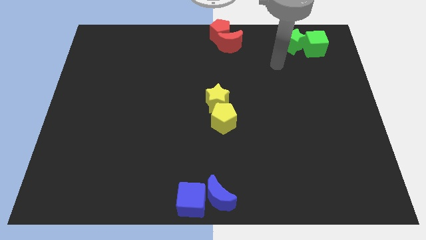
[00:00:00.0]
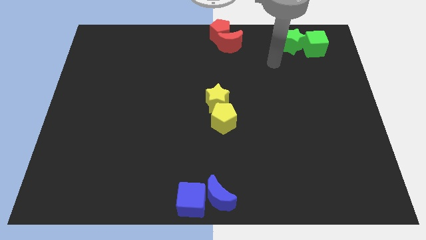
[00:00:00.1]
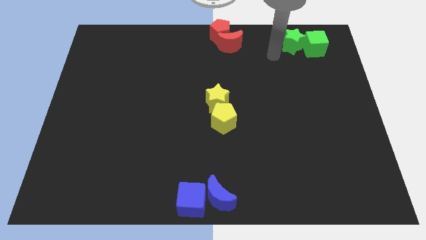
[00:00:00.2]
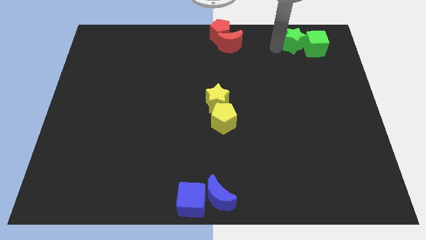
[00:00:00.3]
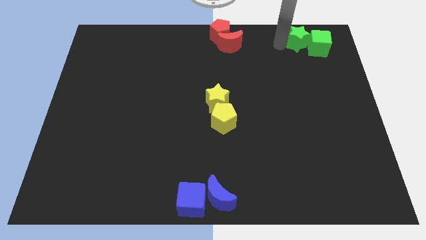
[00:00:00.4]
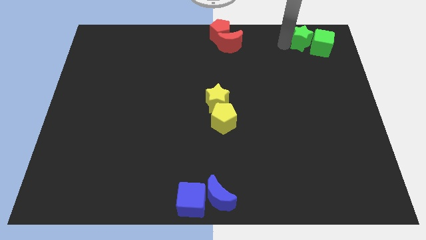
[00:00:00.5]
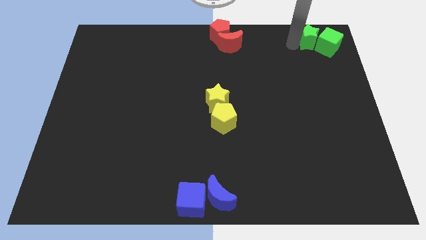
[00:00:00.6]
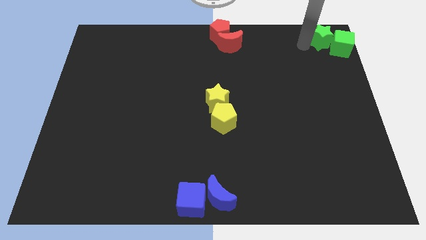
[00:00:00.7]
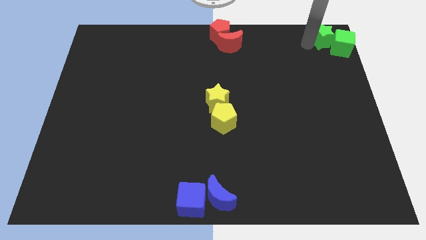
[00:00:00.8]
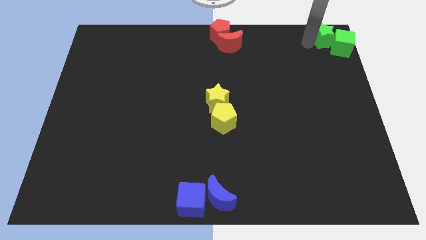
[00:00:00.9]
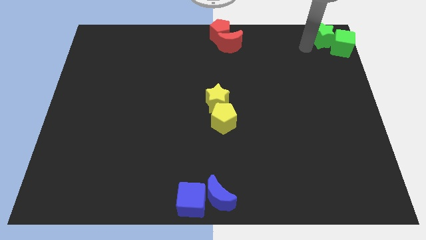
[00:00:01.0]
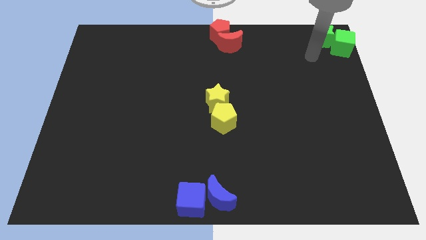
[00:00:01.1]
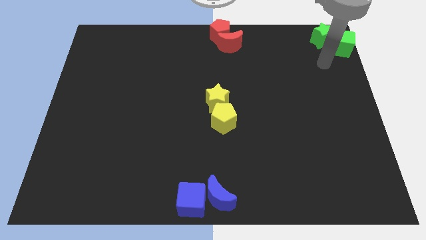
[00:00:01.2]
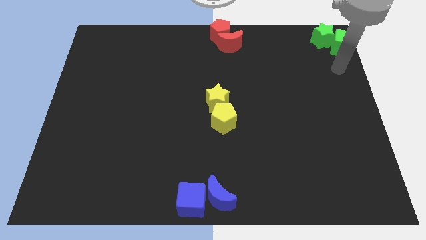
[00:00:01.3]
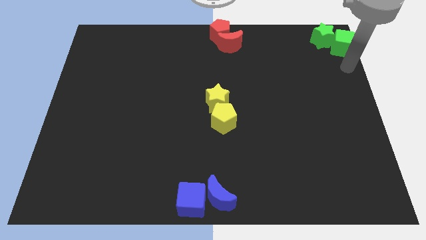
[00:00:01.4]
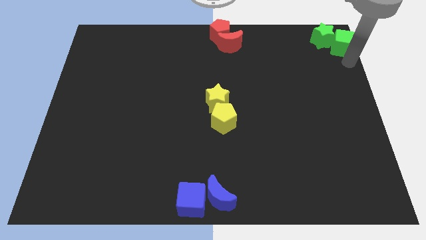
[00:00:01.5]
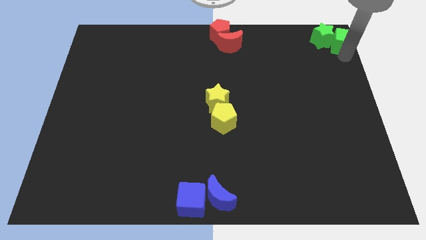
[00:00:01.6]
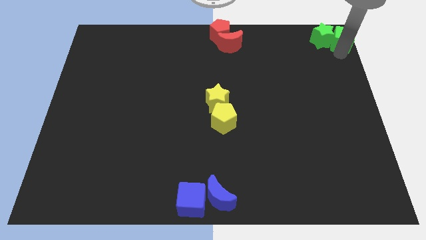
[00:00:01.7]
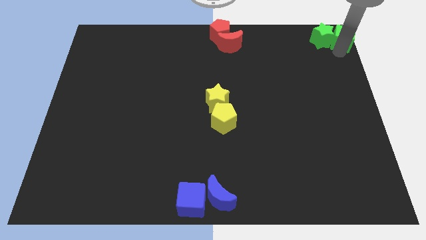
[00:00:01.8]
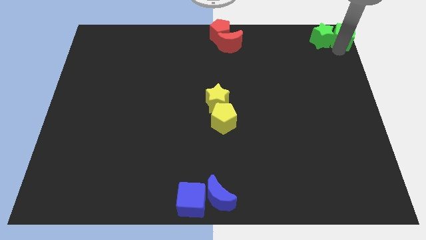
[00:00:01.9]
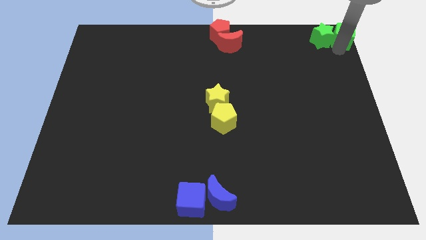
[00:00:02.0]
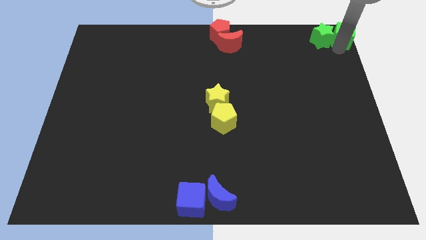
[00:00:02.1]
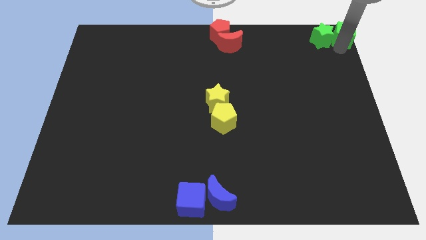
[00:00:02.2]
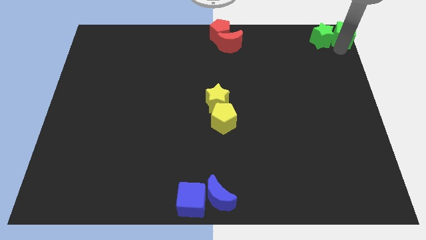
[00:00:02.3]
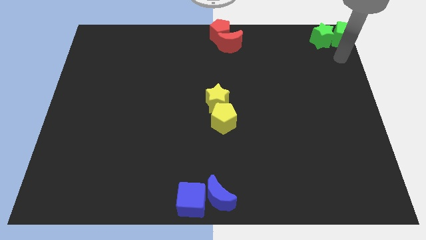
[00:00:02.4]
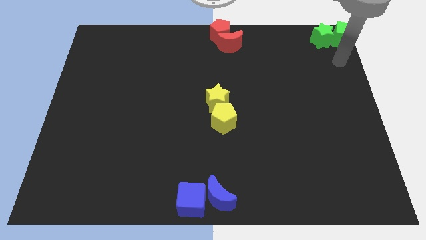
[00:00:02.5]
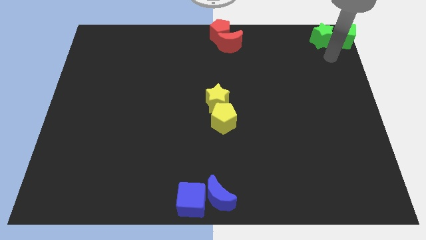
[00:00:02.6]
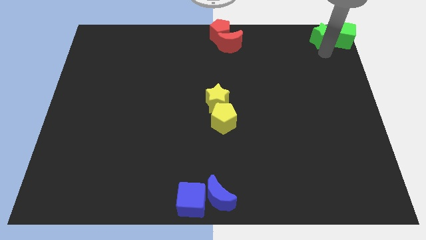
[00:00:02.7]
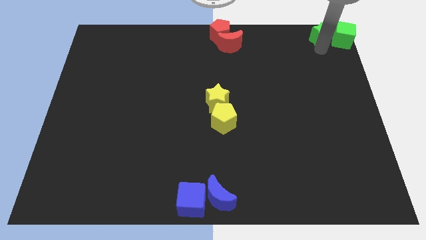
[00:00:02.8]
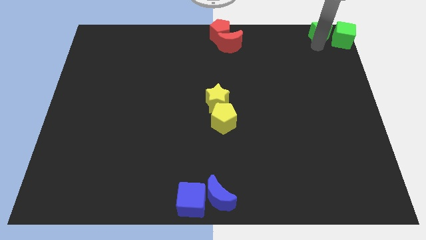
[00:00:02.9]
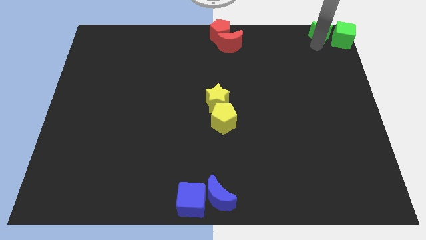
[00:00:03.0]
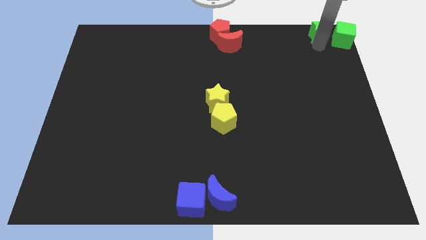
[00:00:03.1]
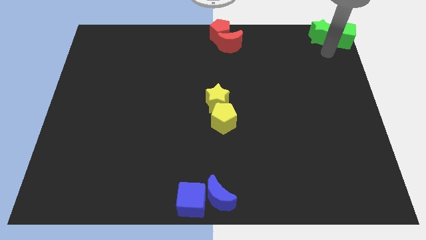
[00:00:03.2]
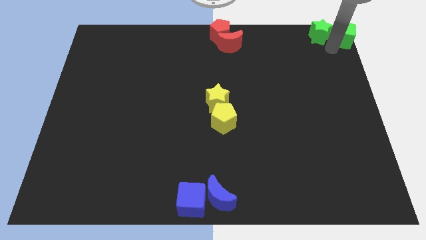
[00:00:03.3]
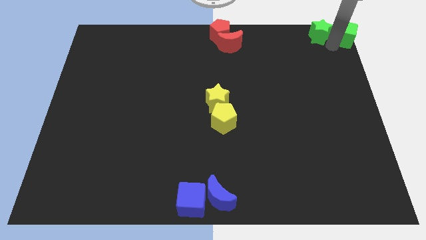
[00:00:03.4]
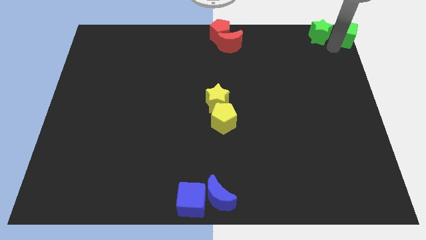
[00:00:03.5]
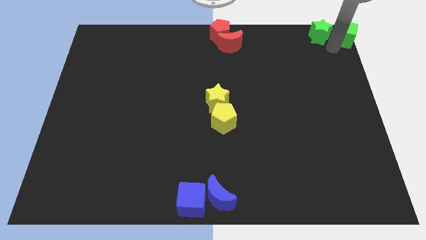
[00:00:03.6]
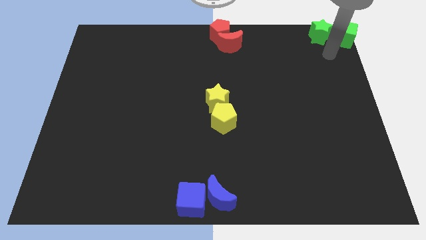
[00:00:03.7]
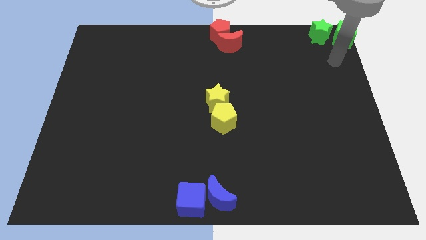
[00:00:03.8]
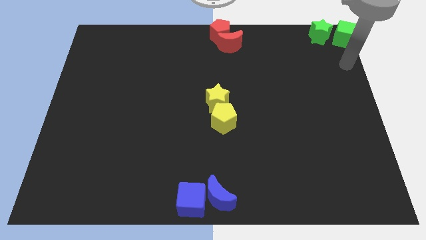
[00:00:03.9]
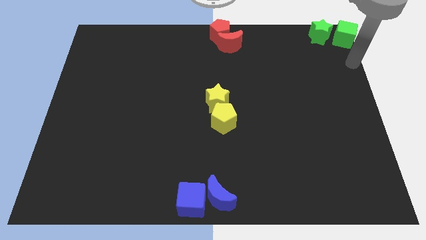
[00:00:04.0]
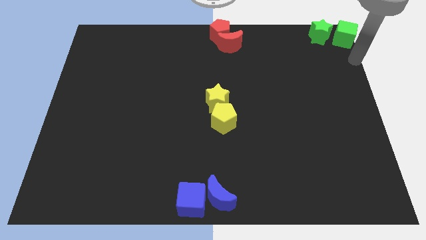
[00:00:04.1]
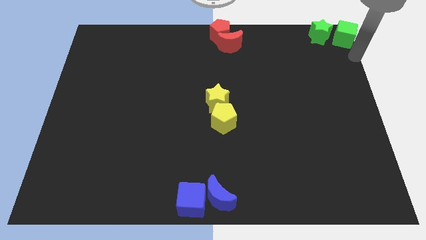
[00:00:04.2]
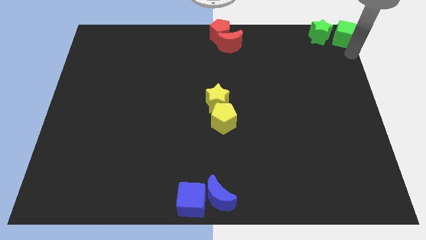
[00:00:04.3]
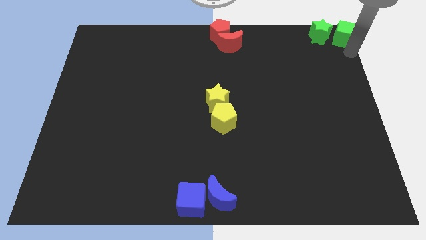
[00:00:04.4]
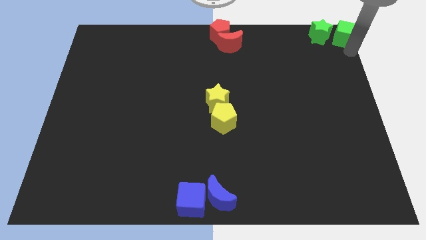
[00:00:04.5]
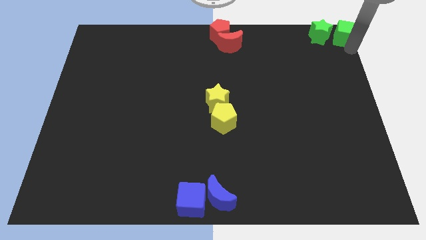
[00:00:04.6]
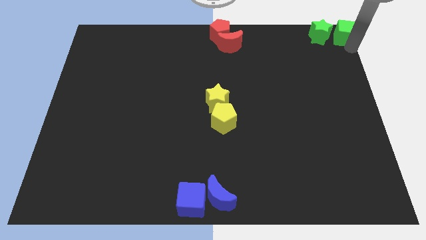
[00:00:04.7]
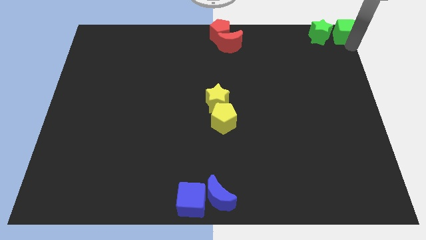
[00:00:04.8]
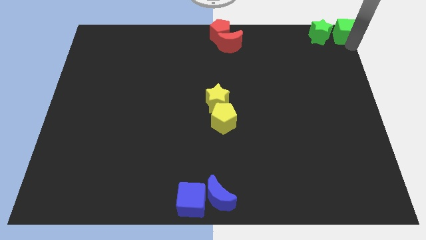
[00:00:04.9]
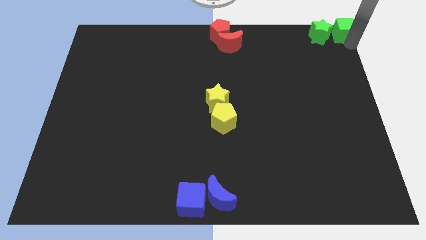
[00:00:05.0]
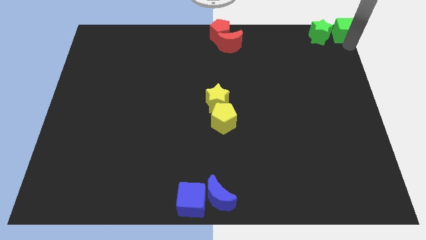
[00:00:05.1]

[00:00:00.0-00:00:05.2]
slide the green blocks to the top right corner of the table

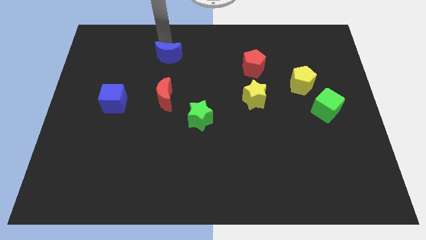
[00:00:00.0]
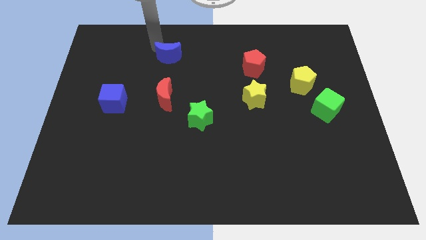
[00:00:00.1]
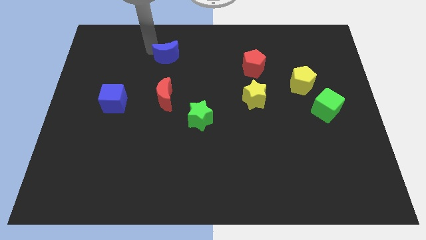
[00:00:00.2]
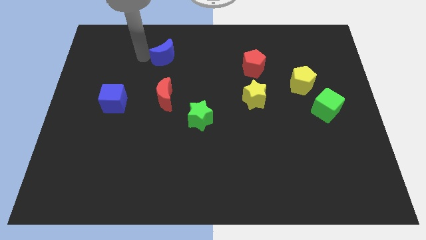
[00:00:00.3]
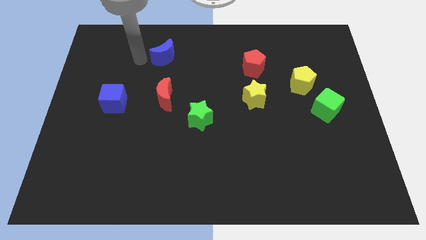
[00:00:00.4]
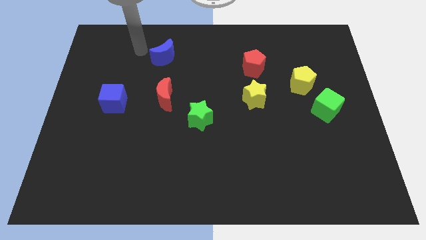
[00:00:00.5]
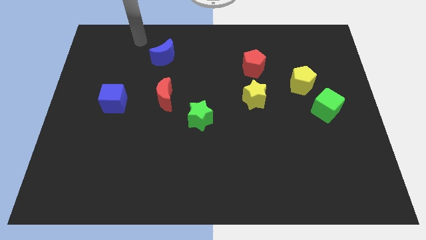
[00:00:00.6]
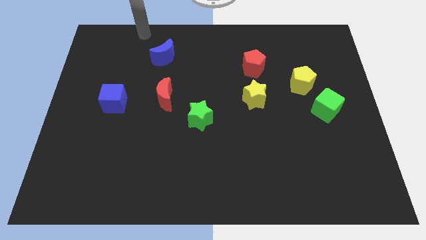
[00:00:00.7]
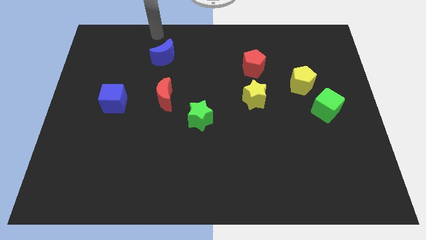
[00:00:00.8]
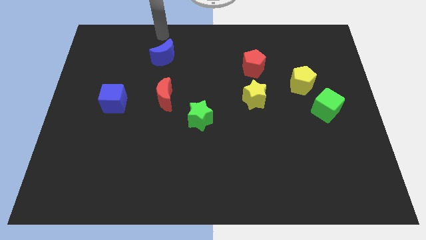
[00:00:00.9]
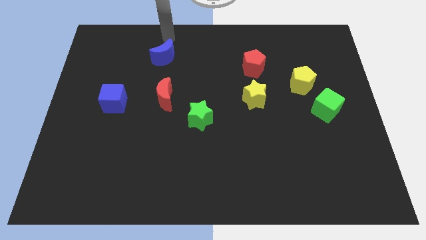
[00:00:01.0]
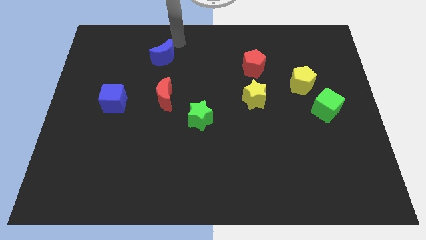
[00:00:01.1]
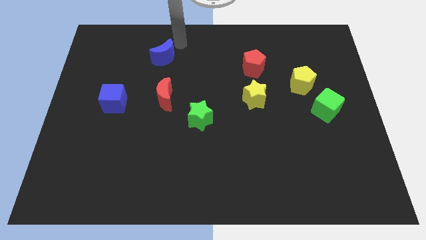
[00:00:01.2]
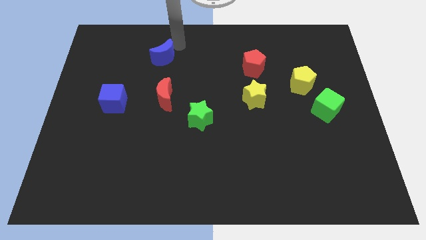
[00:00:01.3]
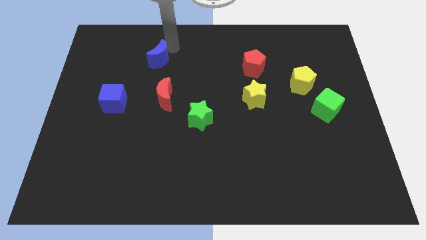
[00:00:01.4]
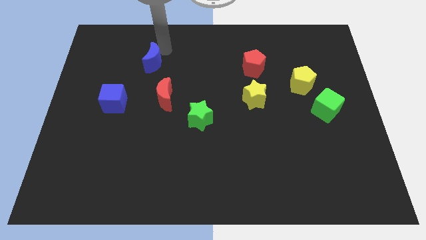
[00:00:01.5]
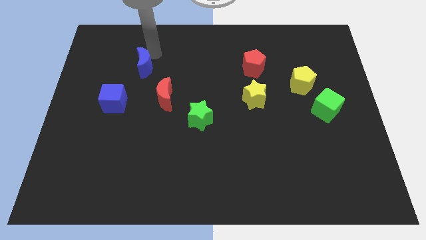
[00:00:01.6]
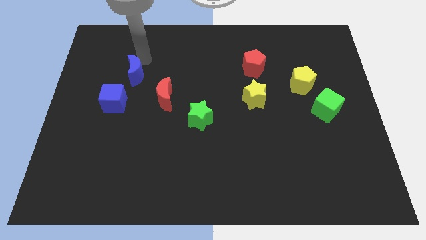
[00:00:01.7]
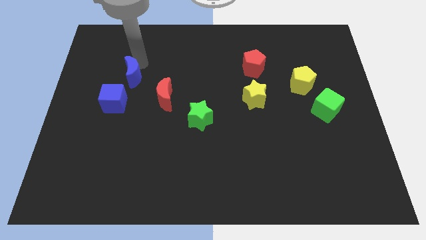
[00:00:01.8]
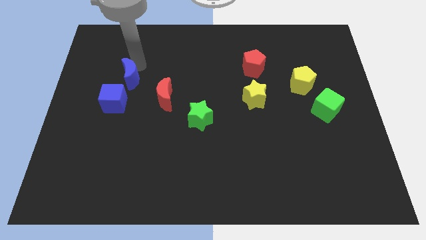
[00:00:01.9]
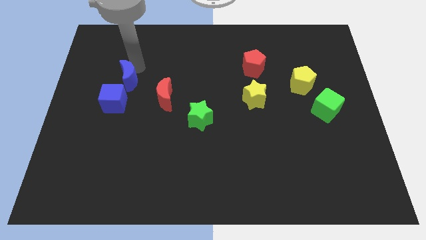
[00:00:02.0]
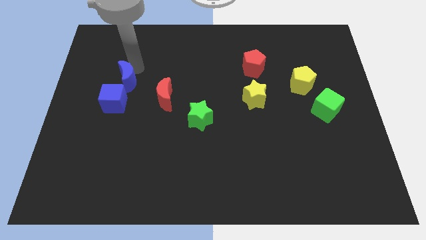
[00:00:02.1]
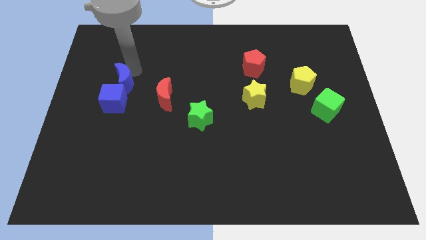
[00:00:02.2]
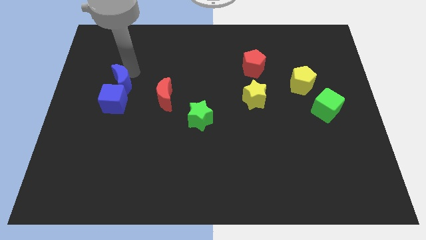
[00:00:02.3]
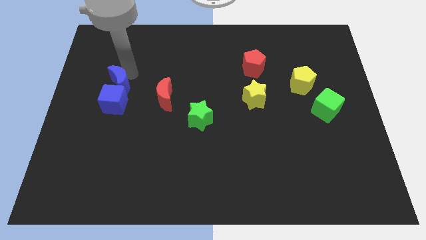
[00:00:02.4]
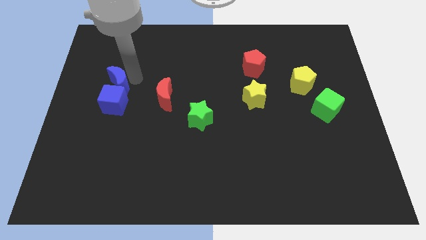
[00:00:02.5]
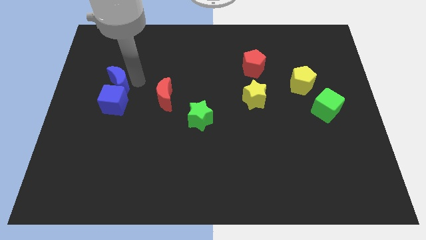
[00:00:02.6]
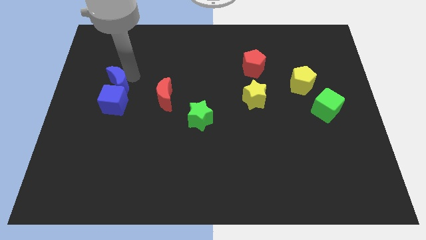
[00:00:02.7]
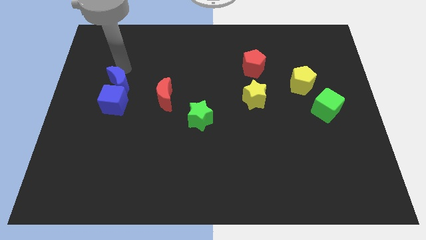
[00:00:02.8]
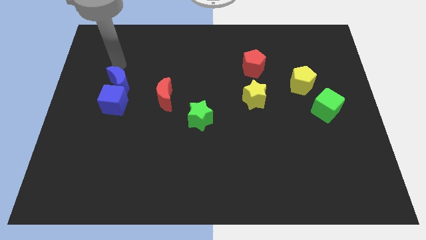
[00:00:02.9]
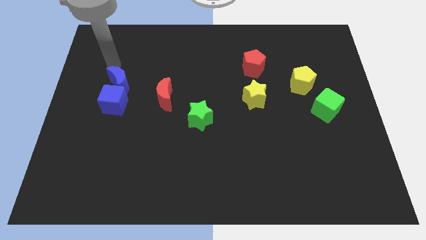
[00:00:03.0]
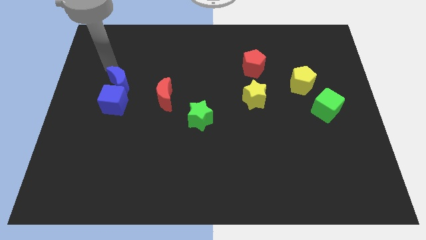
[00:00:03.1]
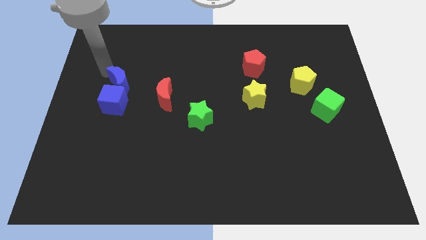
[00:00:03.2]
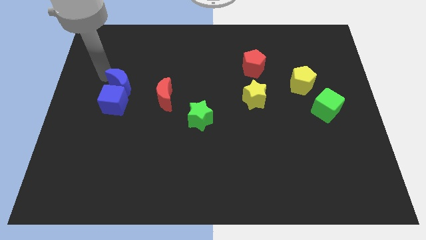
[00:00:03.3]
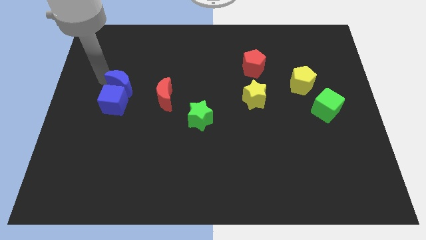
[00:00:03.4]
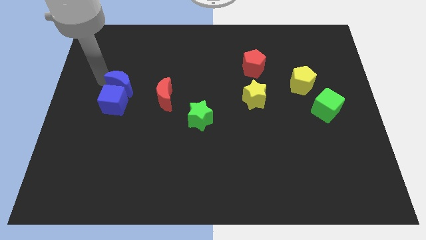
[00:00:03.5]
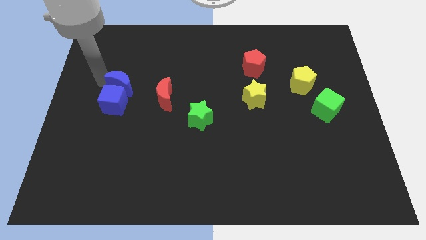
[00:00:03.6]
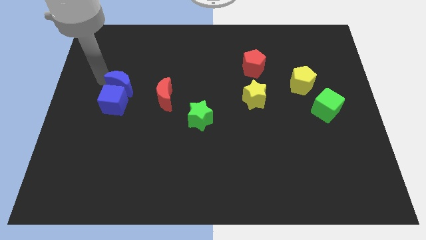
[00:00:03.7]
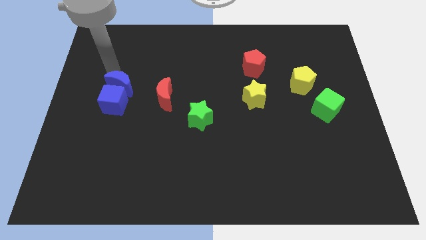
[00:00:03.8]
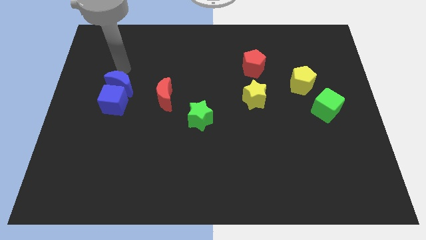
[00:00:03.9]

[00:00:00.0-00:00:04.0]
move the blue crescent into the blue cube
